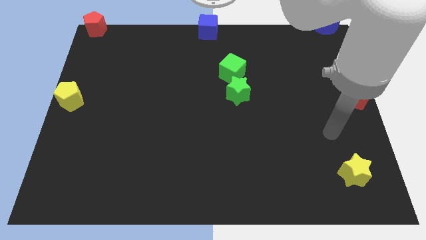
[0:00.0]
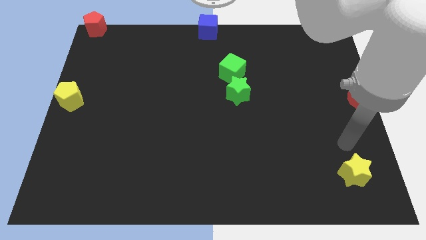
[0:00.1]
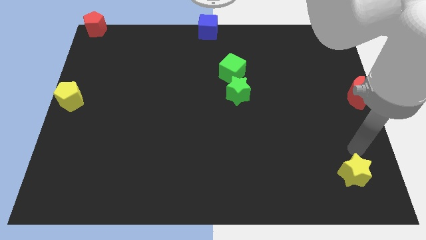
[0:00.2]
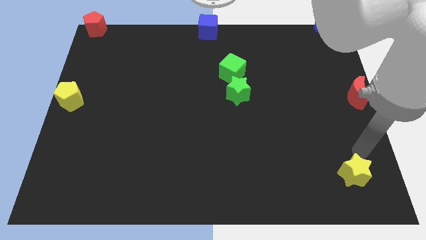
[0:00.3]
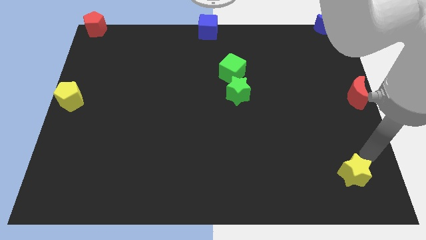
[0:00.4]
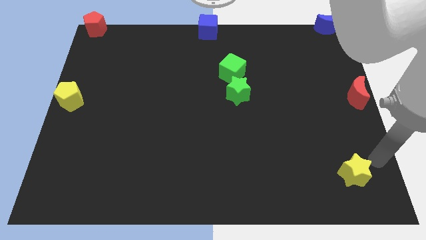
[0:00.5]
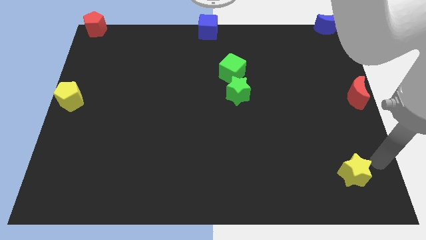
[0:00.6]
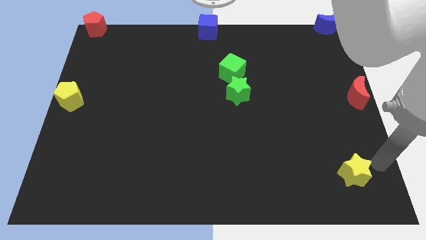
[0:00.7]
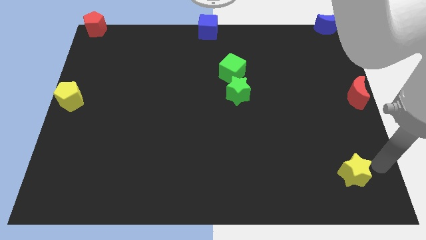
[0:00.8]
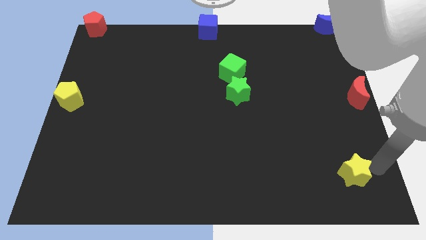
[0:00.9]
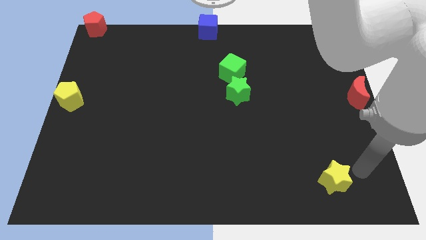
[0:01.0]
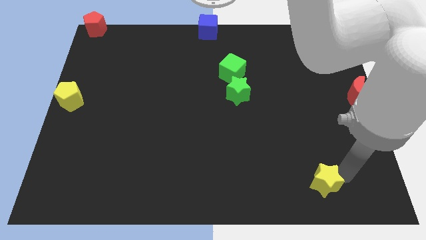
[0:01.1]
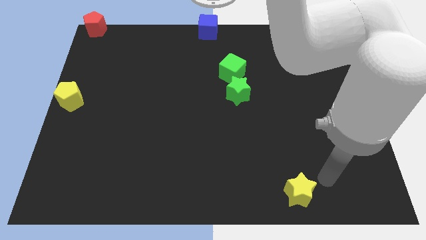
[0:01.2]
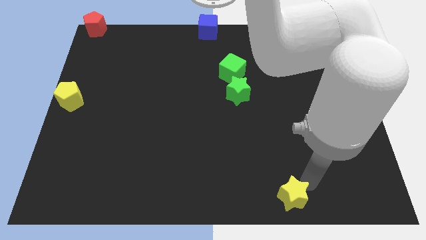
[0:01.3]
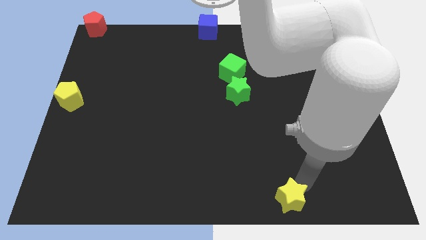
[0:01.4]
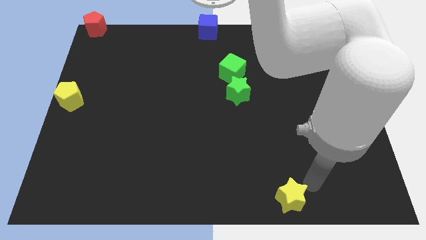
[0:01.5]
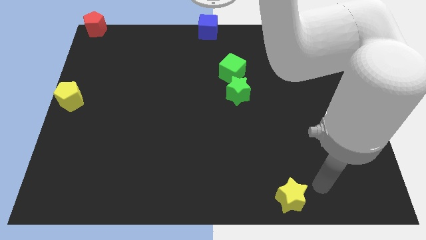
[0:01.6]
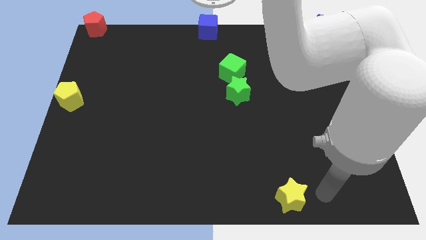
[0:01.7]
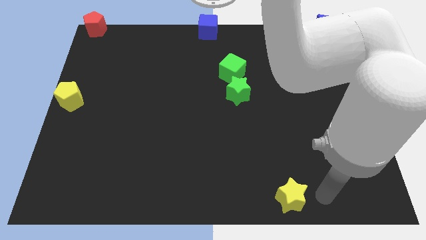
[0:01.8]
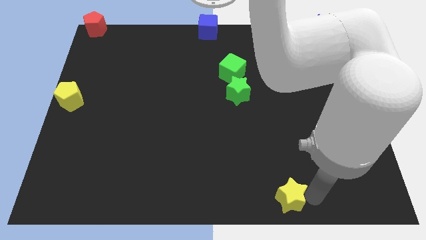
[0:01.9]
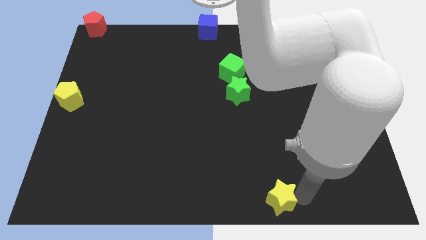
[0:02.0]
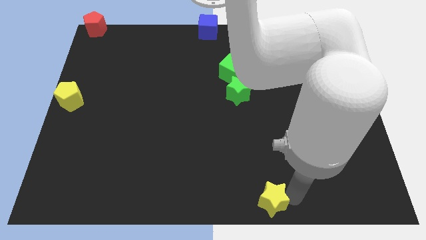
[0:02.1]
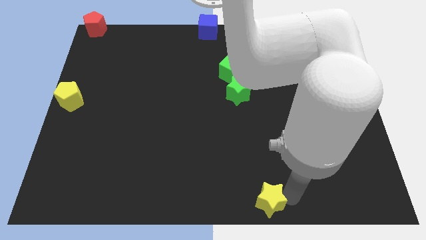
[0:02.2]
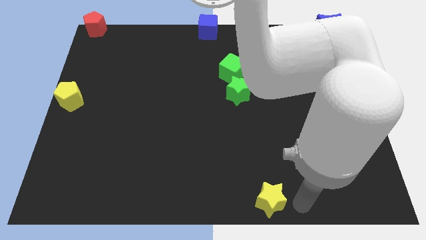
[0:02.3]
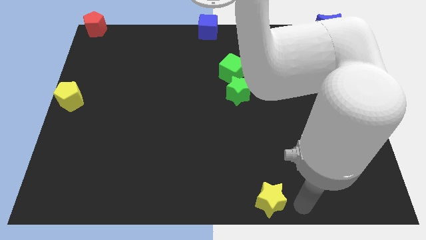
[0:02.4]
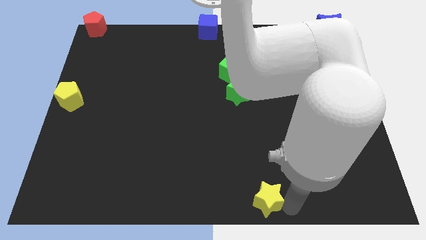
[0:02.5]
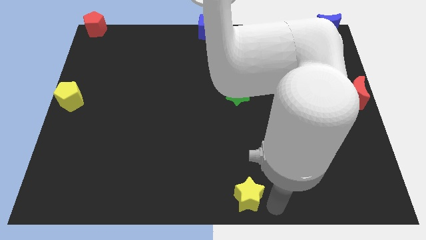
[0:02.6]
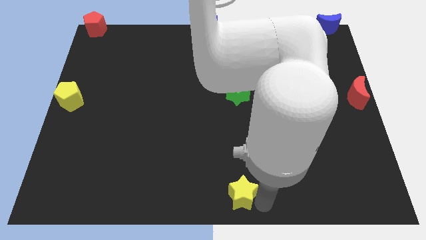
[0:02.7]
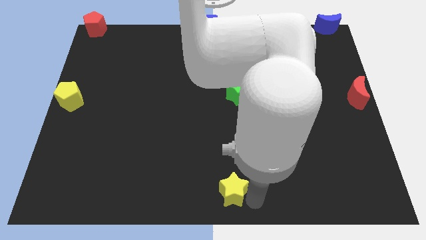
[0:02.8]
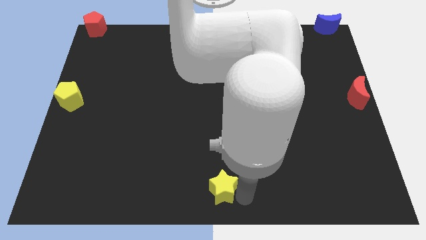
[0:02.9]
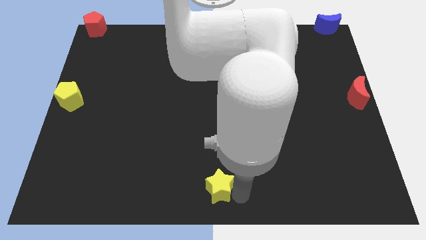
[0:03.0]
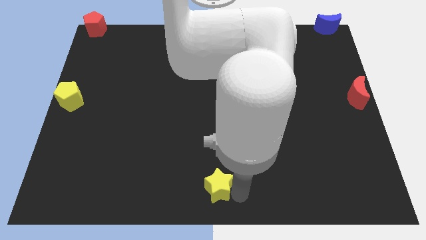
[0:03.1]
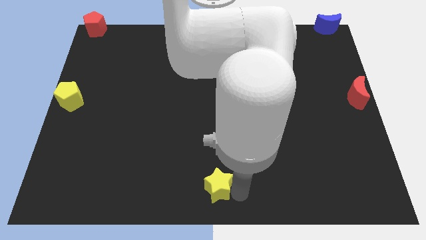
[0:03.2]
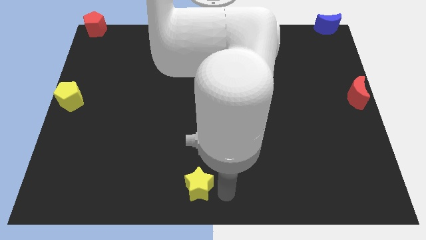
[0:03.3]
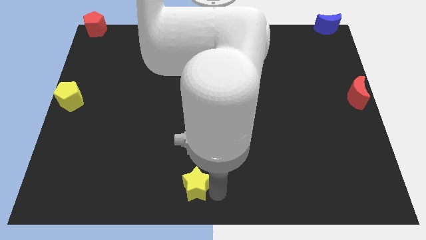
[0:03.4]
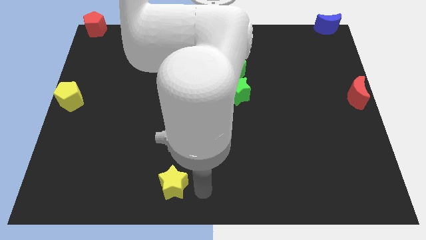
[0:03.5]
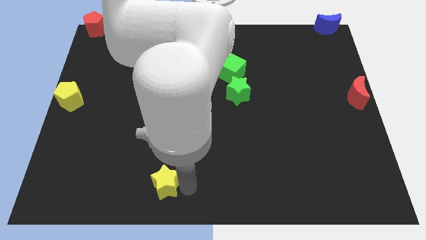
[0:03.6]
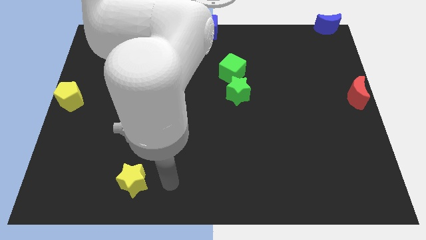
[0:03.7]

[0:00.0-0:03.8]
push the yellow star towards the bottom left

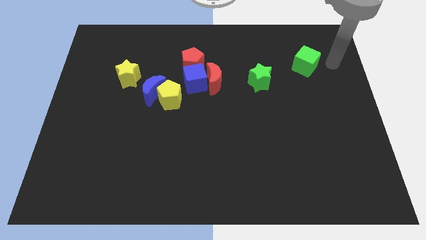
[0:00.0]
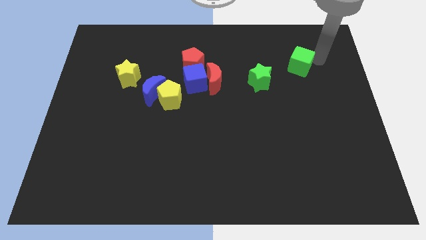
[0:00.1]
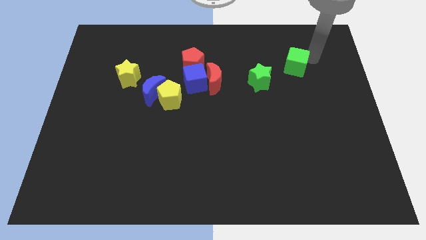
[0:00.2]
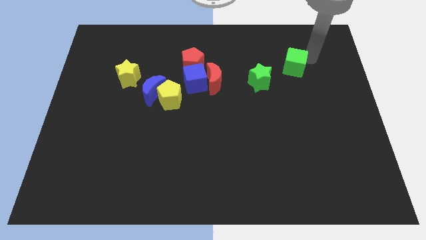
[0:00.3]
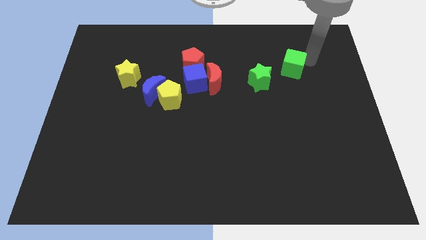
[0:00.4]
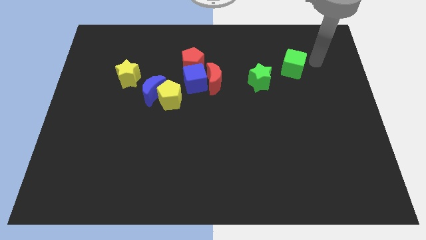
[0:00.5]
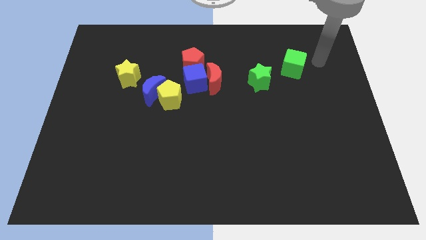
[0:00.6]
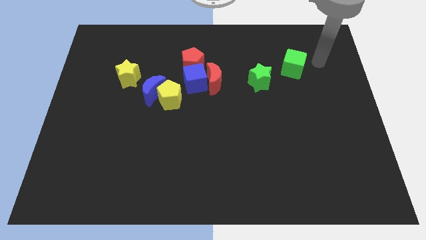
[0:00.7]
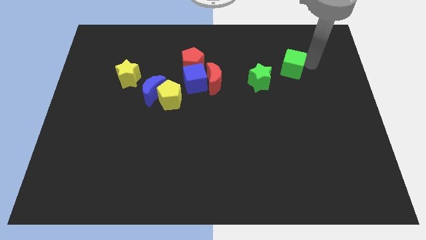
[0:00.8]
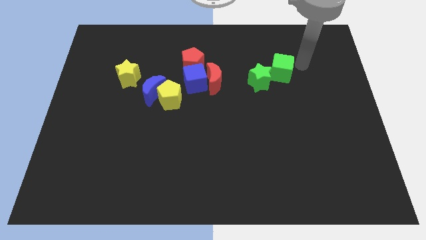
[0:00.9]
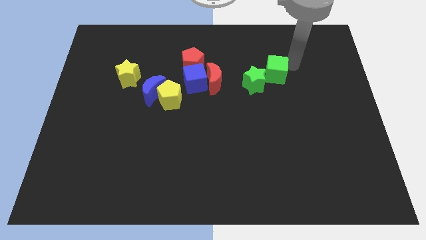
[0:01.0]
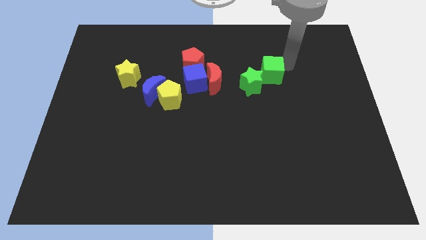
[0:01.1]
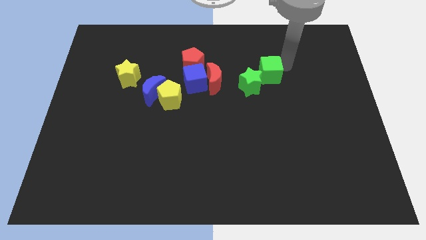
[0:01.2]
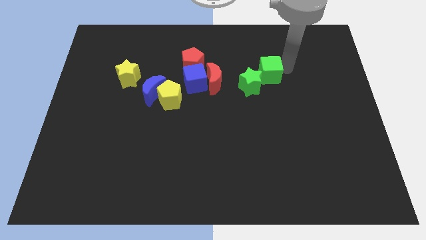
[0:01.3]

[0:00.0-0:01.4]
move green cube into the green star

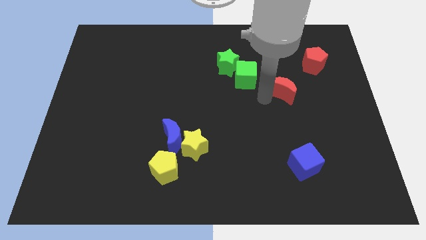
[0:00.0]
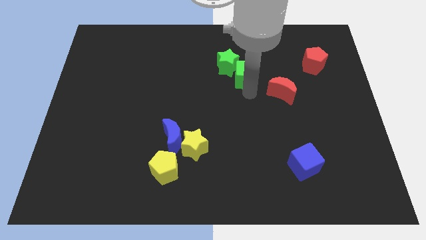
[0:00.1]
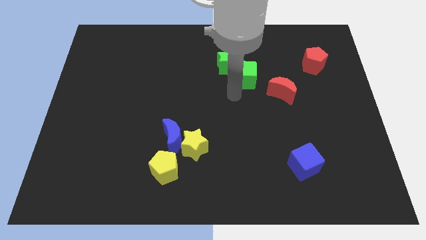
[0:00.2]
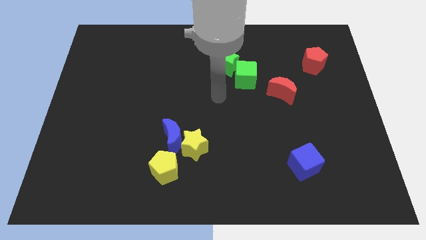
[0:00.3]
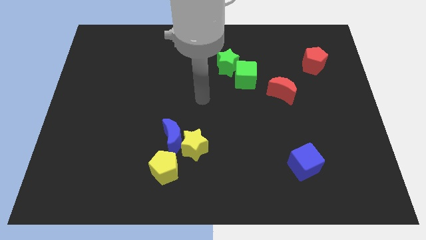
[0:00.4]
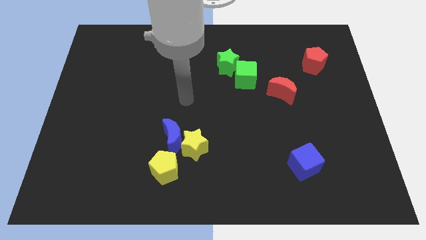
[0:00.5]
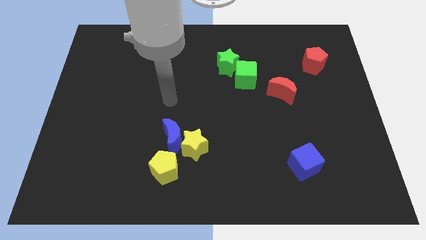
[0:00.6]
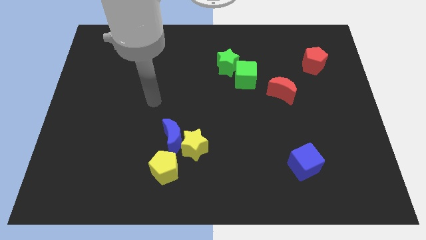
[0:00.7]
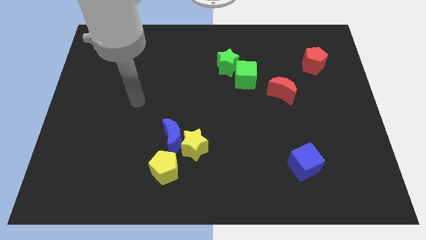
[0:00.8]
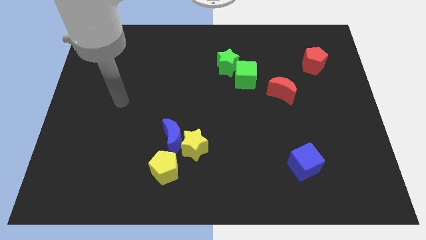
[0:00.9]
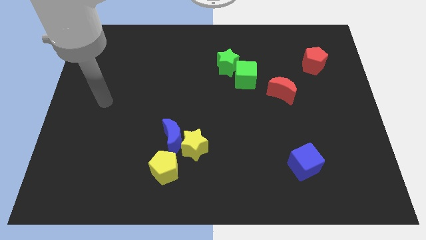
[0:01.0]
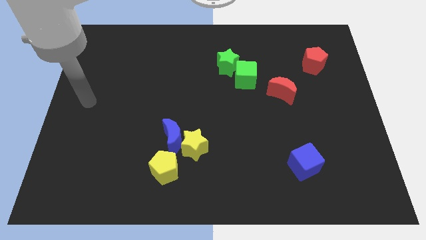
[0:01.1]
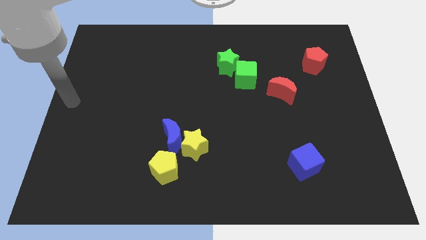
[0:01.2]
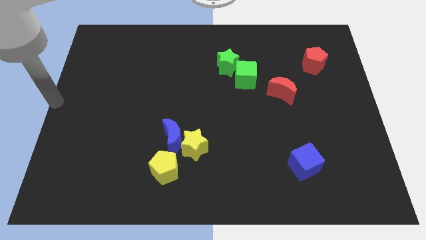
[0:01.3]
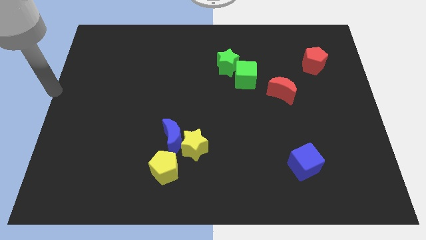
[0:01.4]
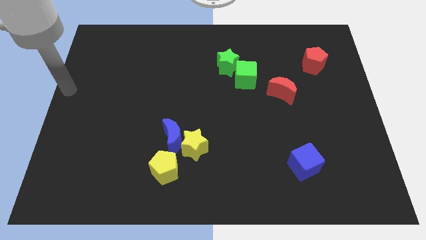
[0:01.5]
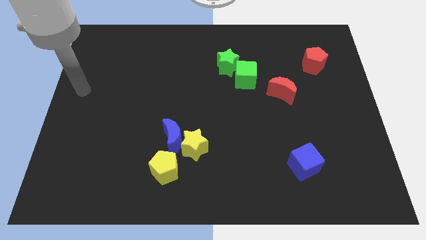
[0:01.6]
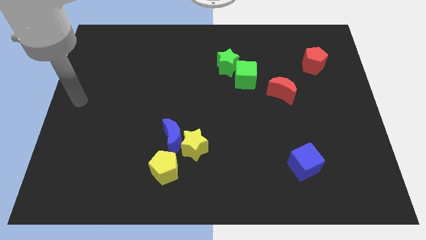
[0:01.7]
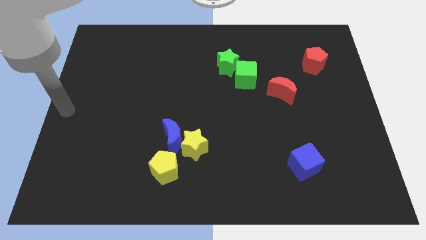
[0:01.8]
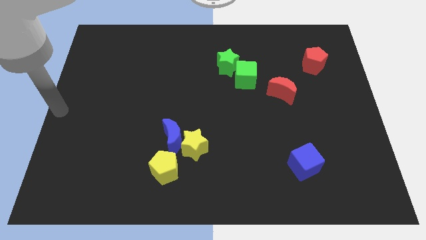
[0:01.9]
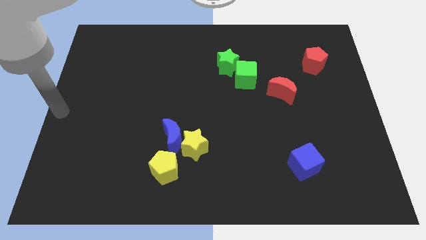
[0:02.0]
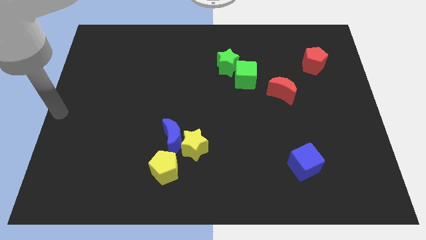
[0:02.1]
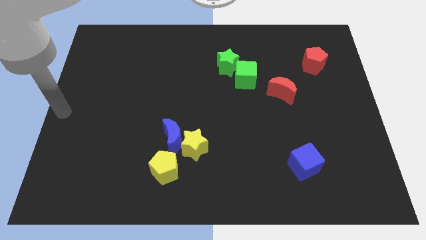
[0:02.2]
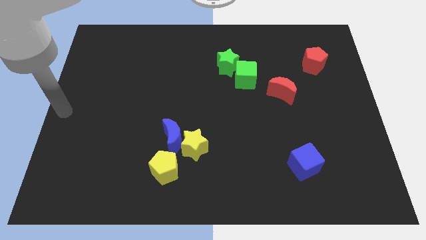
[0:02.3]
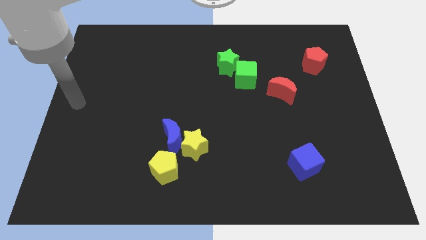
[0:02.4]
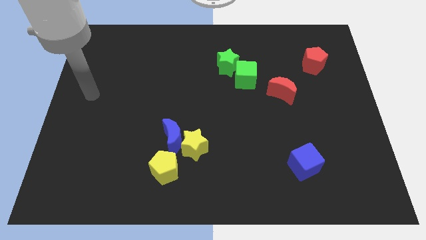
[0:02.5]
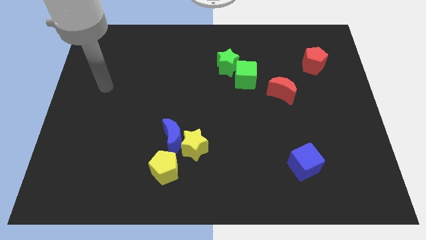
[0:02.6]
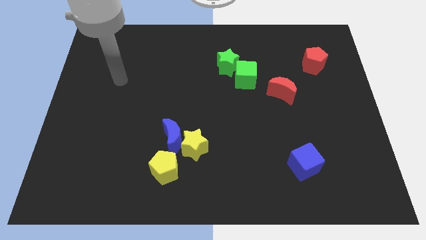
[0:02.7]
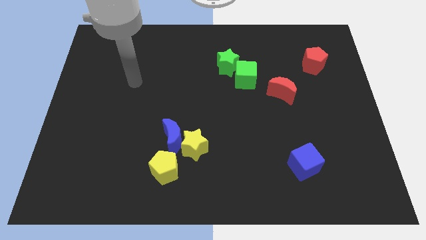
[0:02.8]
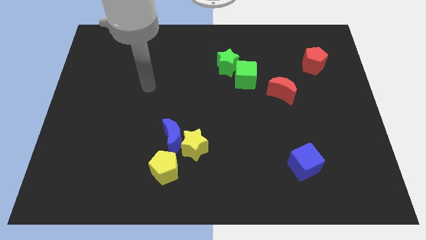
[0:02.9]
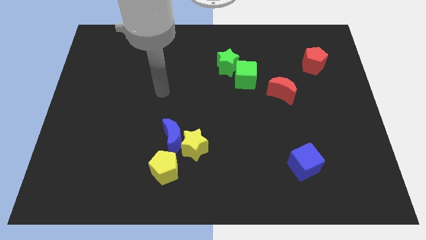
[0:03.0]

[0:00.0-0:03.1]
slide your arm away from green cube

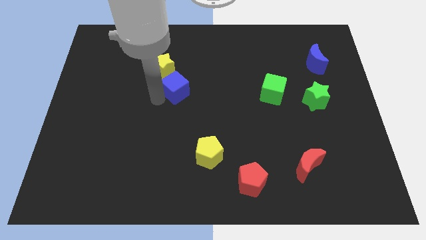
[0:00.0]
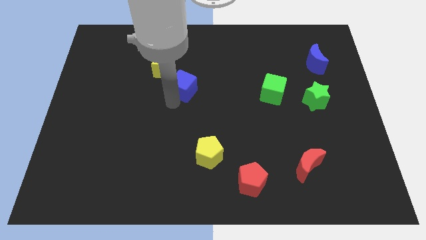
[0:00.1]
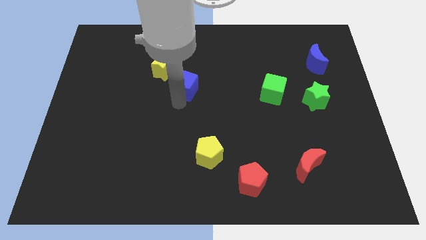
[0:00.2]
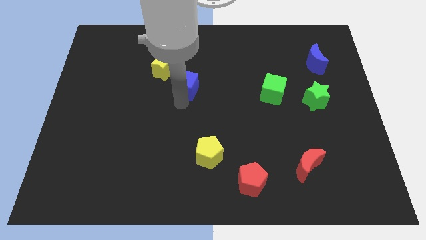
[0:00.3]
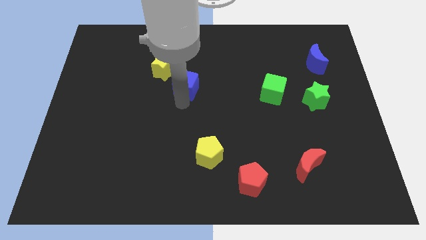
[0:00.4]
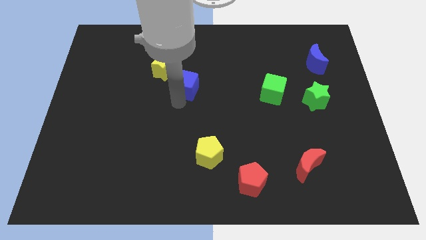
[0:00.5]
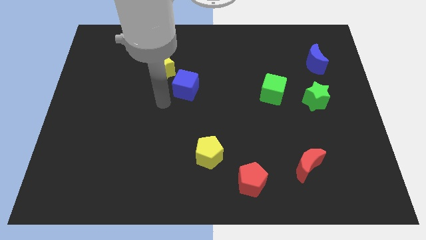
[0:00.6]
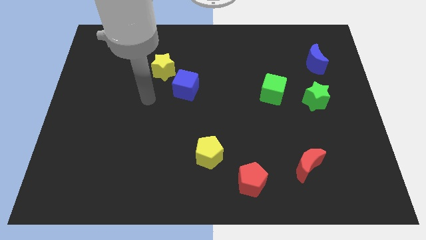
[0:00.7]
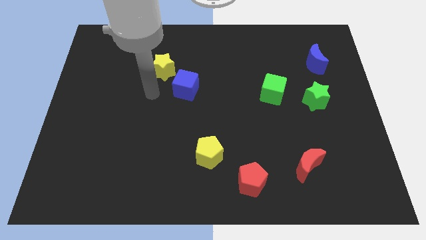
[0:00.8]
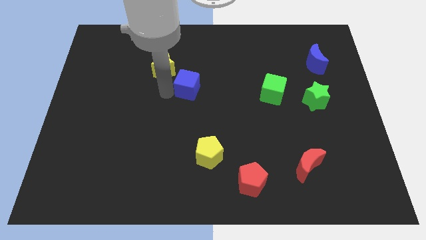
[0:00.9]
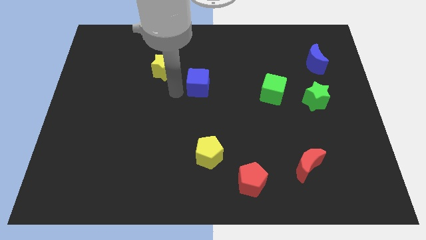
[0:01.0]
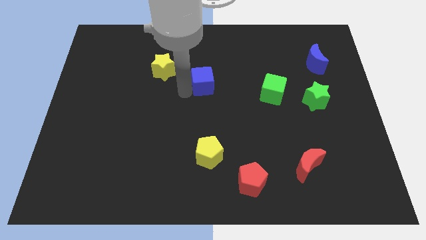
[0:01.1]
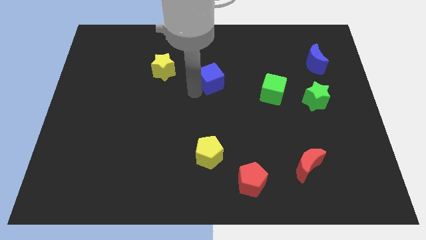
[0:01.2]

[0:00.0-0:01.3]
push blue cube above yellow pentagon
